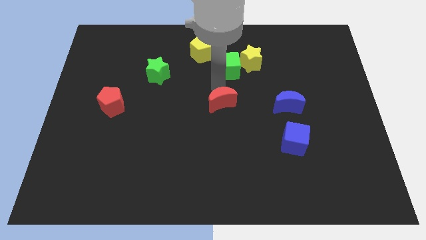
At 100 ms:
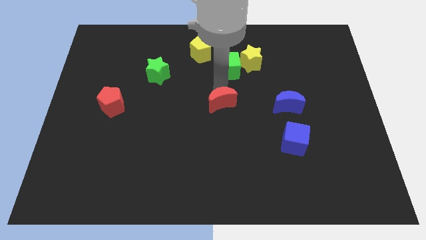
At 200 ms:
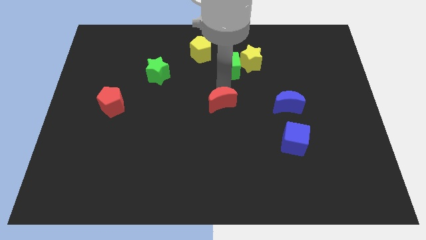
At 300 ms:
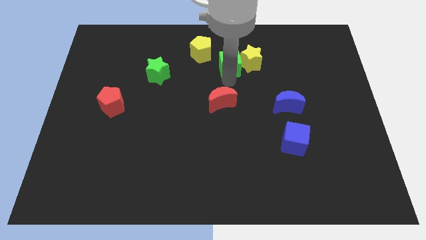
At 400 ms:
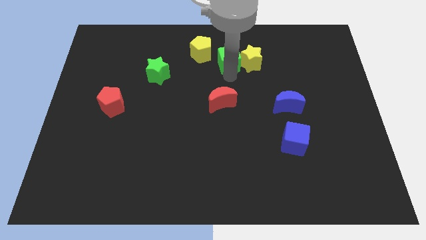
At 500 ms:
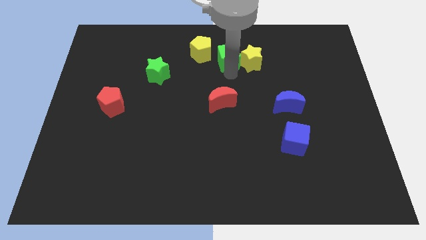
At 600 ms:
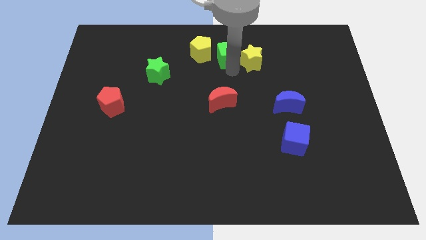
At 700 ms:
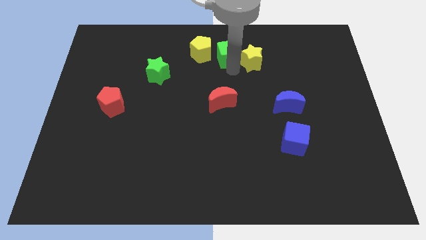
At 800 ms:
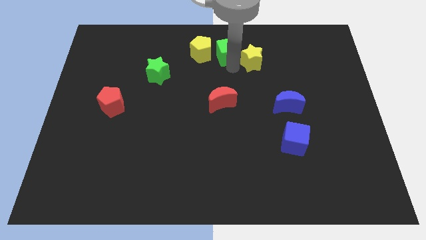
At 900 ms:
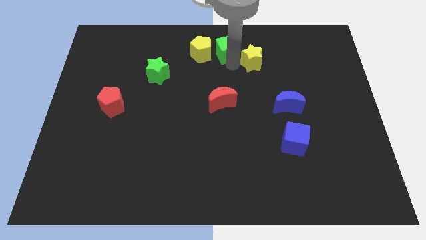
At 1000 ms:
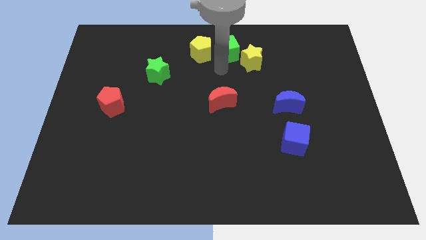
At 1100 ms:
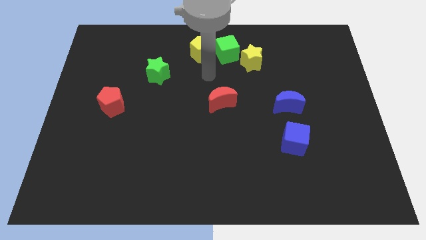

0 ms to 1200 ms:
move the green cube to the right of the yellow pentagon

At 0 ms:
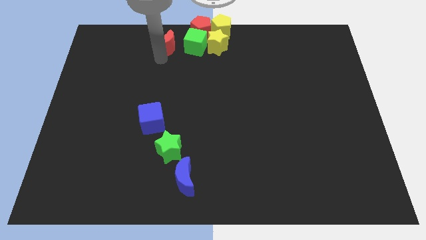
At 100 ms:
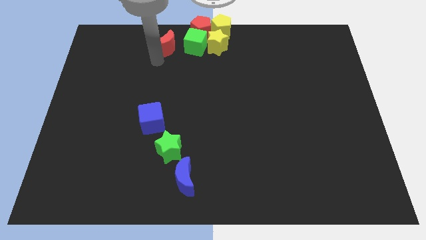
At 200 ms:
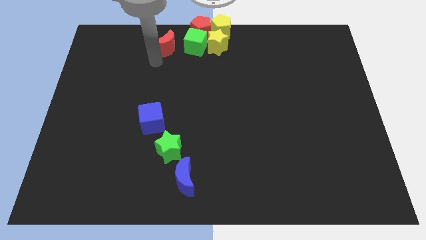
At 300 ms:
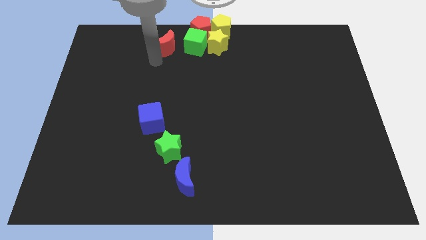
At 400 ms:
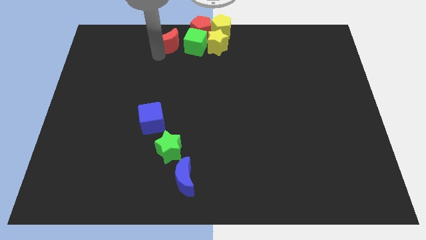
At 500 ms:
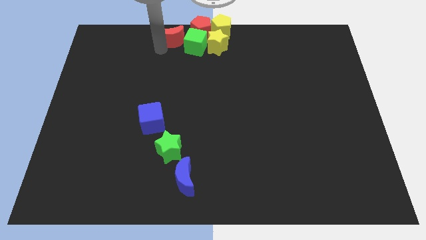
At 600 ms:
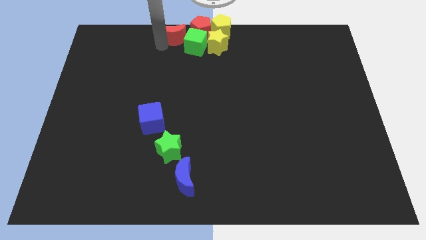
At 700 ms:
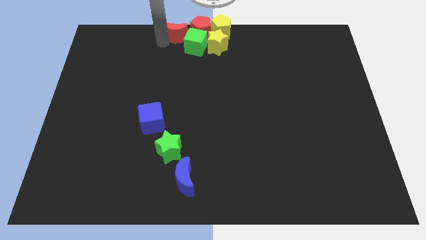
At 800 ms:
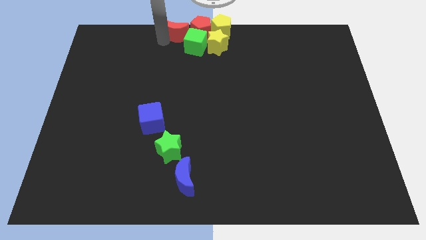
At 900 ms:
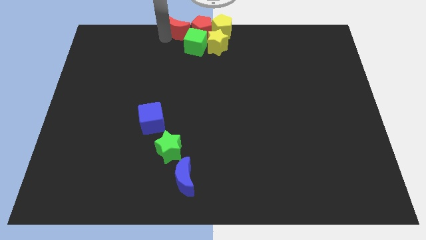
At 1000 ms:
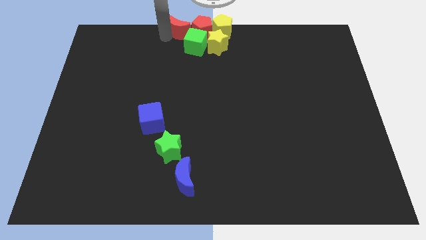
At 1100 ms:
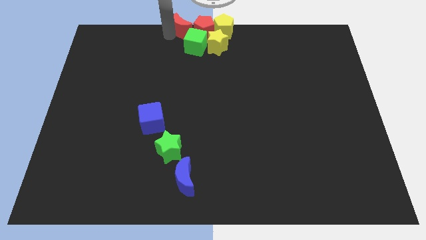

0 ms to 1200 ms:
move the red crescent into the red pentagon

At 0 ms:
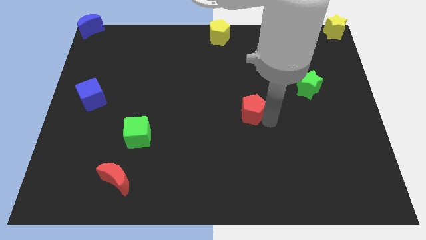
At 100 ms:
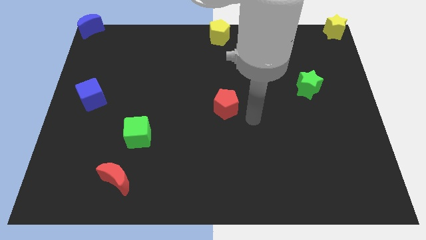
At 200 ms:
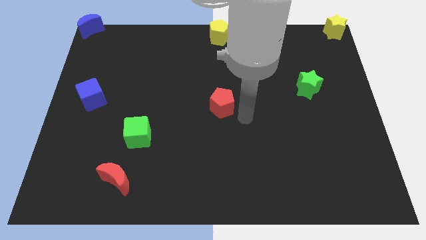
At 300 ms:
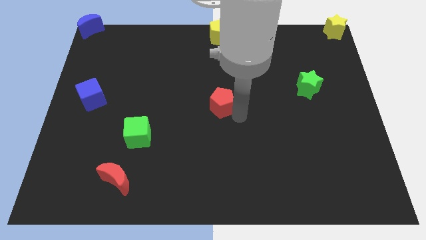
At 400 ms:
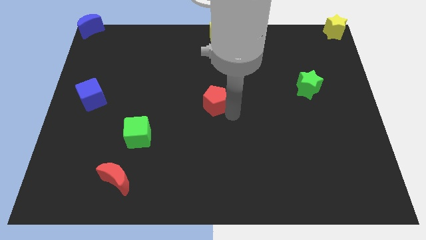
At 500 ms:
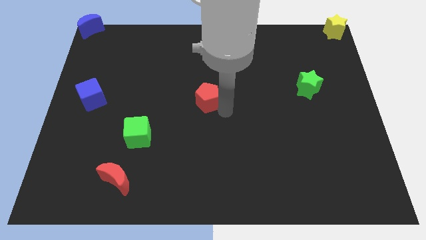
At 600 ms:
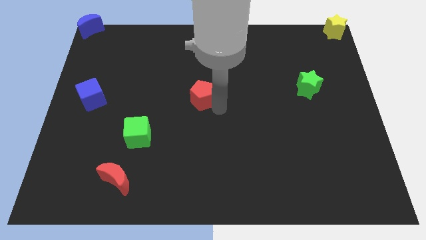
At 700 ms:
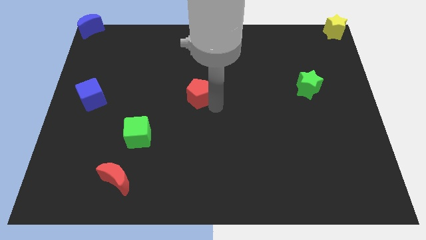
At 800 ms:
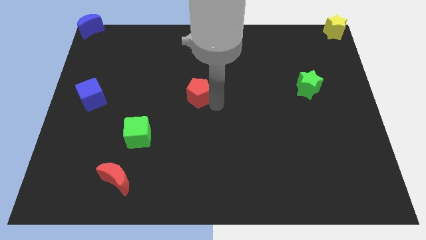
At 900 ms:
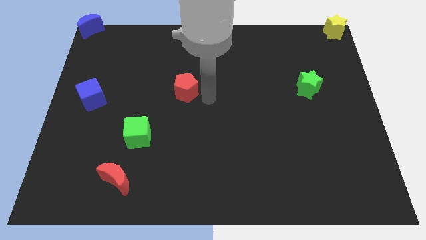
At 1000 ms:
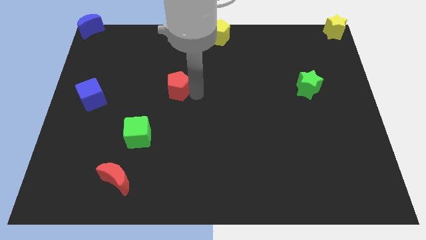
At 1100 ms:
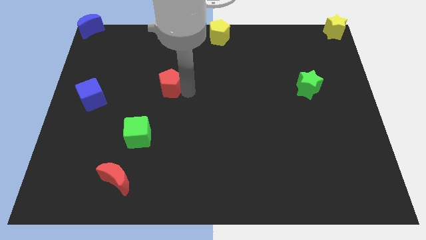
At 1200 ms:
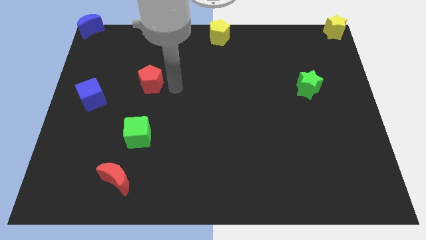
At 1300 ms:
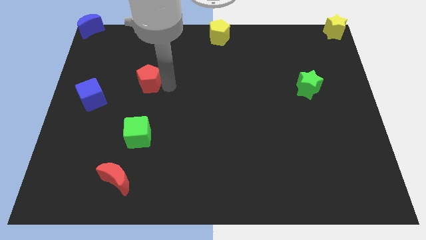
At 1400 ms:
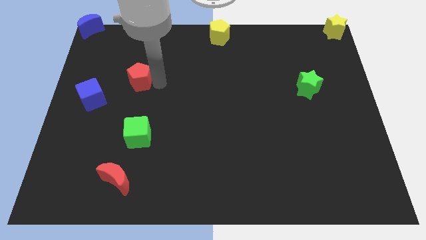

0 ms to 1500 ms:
put the red pentagon vertically above the green cube

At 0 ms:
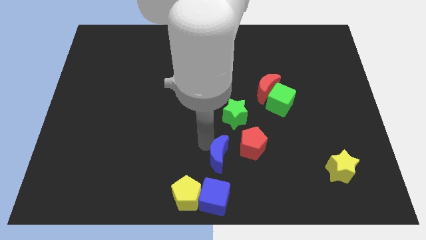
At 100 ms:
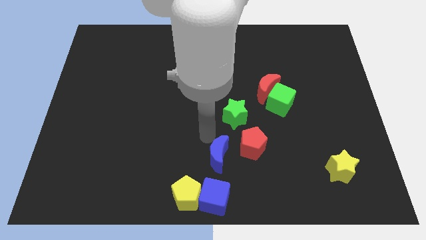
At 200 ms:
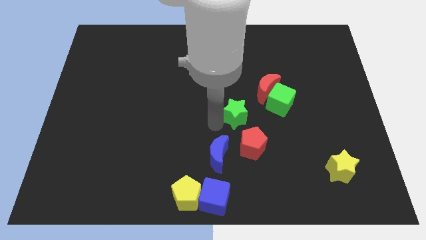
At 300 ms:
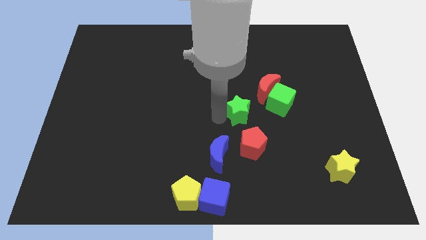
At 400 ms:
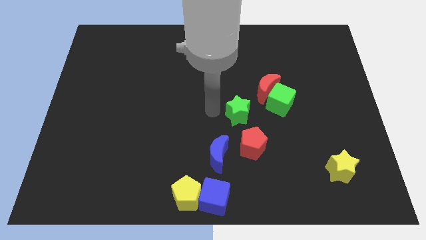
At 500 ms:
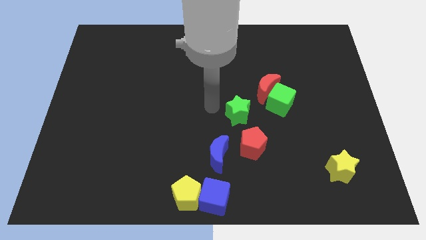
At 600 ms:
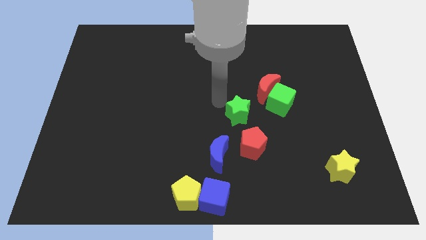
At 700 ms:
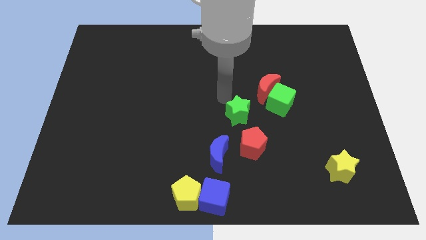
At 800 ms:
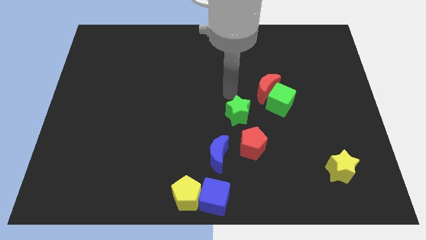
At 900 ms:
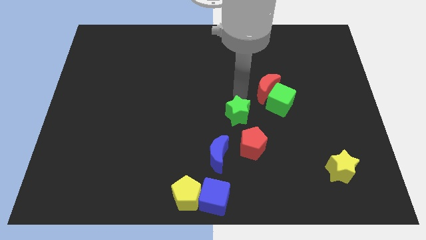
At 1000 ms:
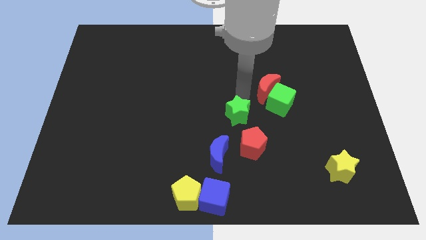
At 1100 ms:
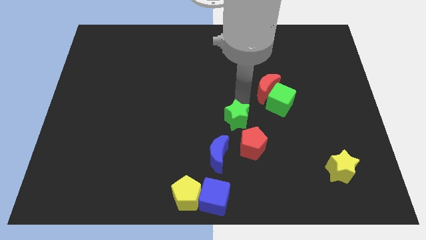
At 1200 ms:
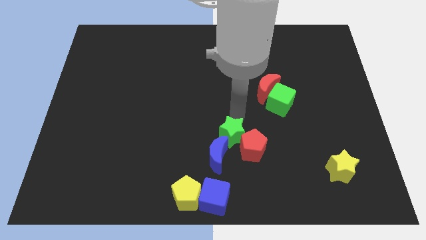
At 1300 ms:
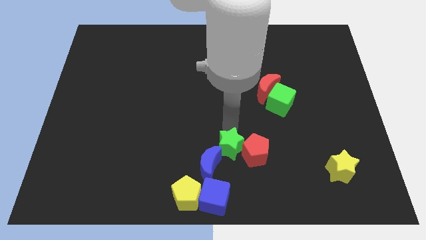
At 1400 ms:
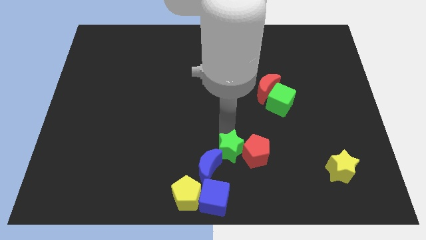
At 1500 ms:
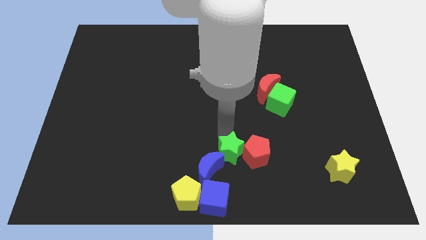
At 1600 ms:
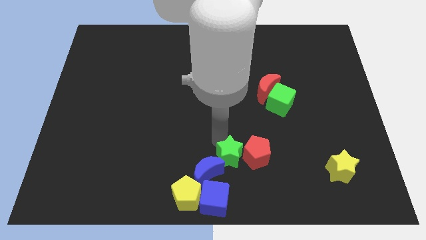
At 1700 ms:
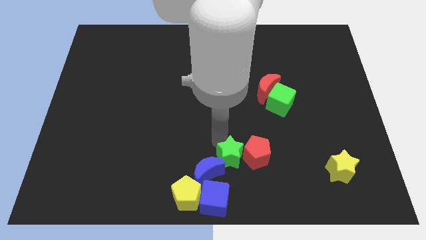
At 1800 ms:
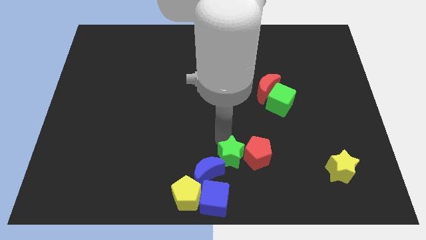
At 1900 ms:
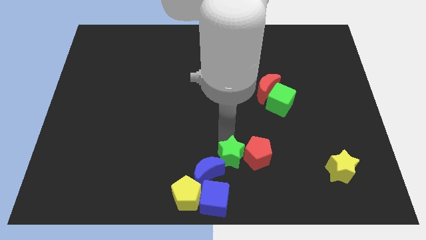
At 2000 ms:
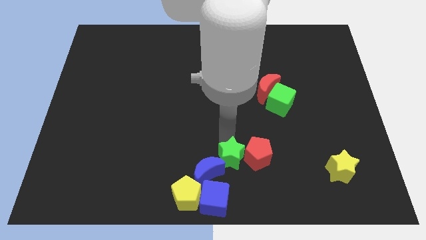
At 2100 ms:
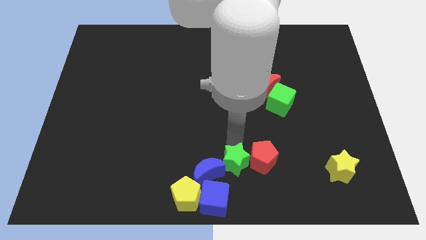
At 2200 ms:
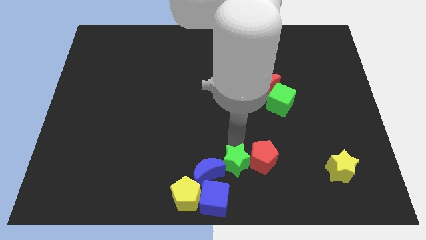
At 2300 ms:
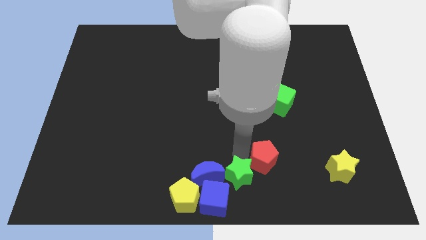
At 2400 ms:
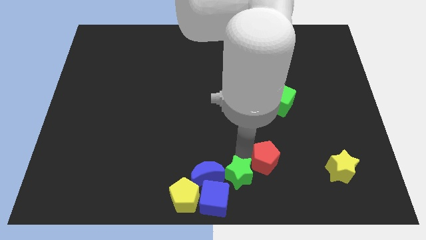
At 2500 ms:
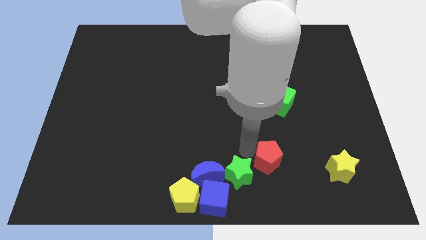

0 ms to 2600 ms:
move the green star in between the blue crescent and red pentagon

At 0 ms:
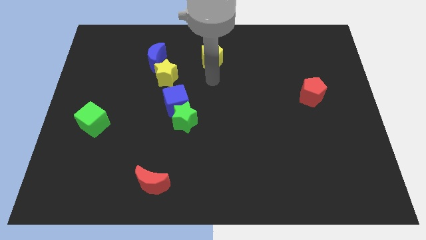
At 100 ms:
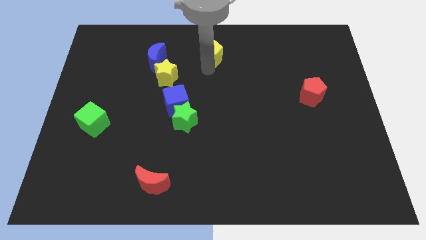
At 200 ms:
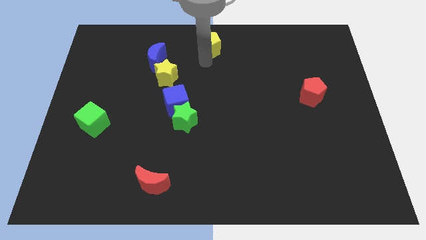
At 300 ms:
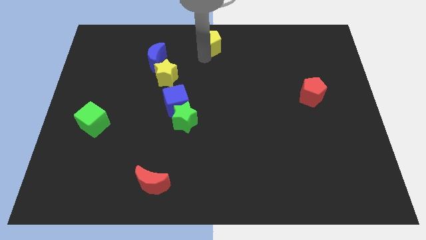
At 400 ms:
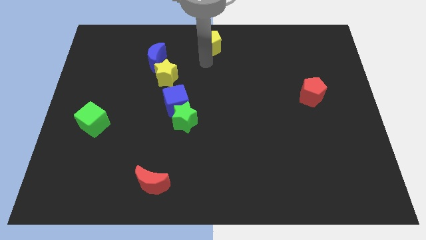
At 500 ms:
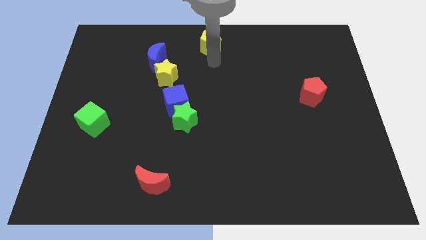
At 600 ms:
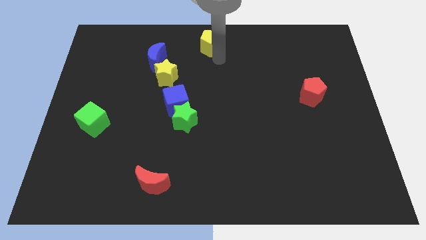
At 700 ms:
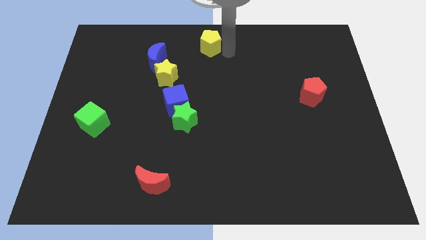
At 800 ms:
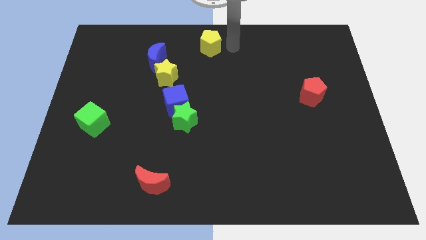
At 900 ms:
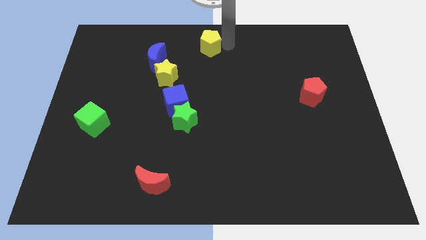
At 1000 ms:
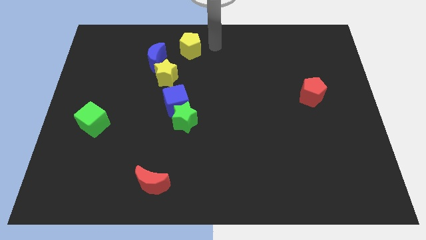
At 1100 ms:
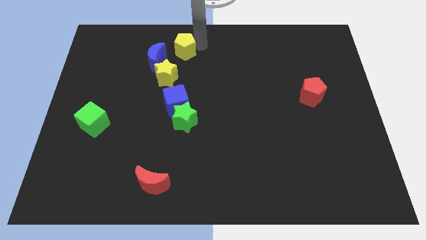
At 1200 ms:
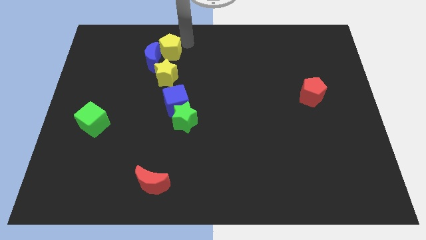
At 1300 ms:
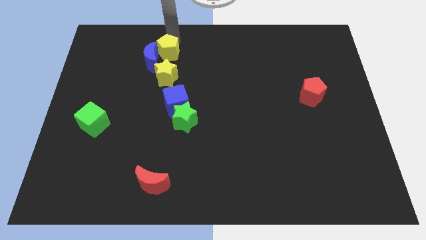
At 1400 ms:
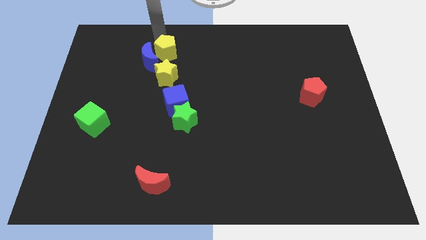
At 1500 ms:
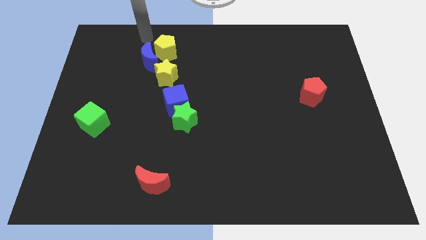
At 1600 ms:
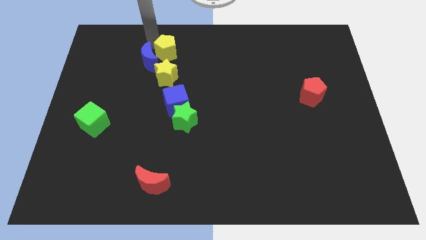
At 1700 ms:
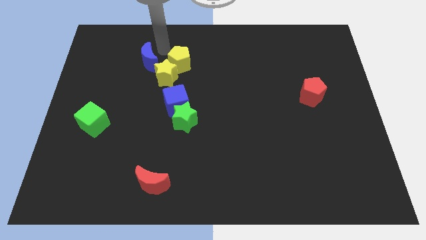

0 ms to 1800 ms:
push blue moon with yellow pentagon

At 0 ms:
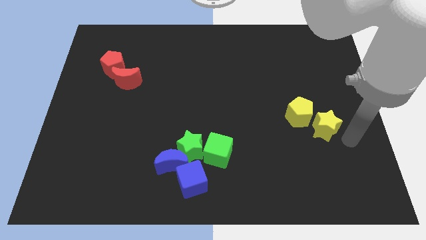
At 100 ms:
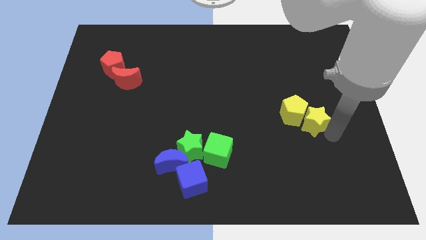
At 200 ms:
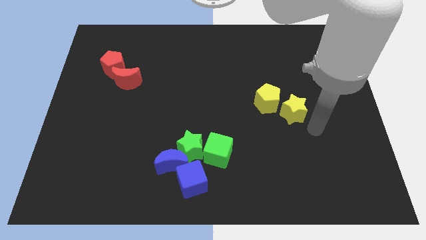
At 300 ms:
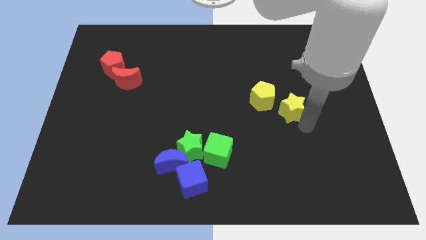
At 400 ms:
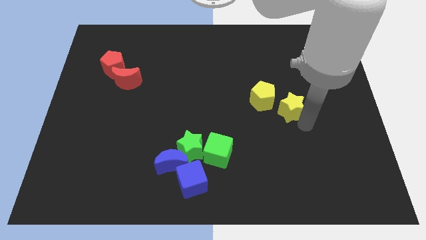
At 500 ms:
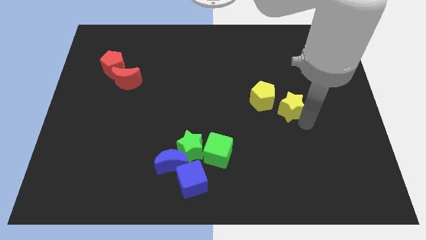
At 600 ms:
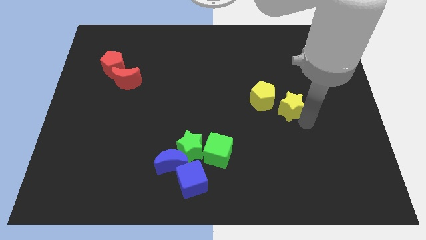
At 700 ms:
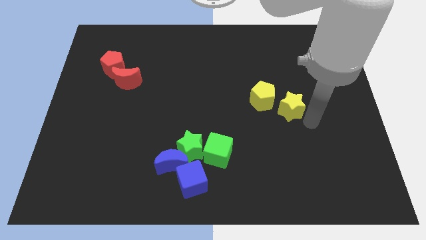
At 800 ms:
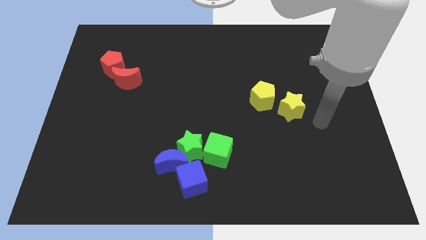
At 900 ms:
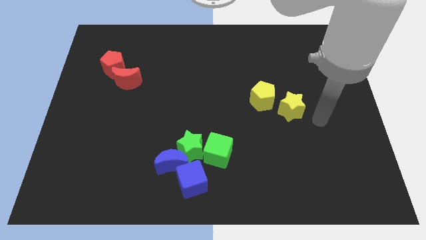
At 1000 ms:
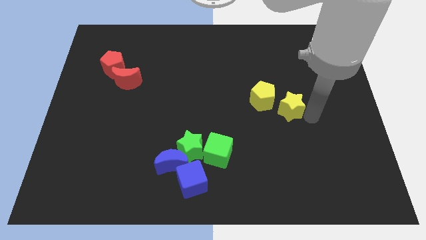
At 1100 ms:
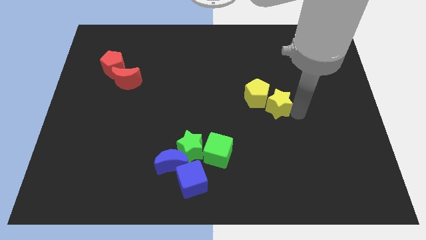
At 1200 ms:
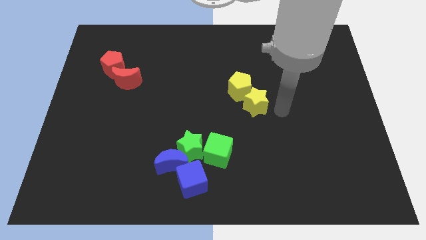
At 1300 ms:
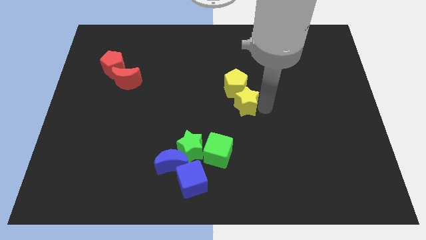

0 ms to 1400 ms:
push the yellow blocks towards the center of the board
